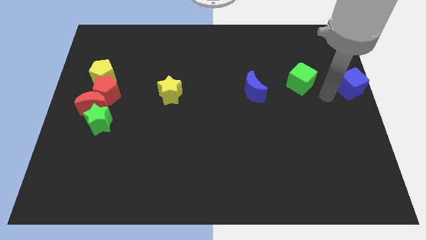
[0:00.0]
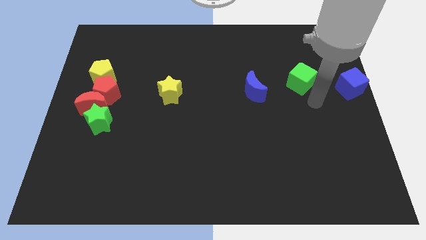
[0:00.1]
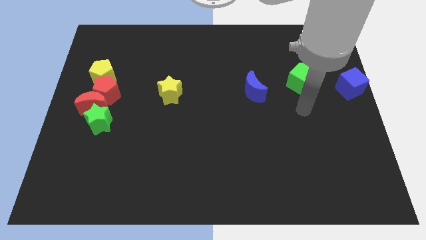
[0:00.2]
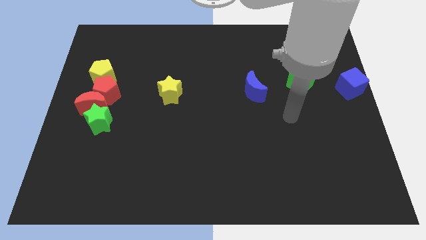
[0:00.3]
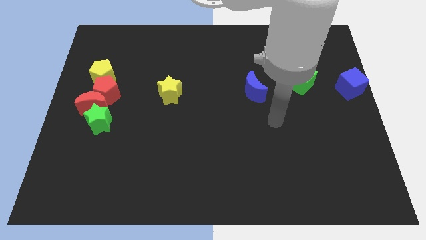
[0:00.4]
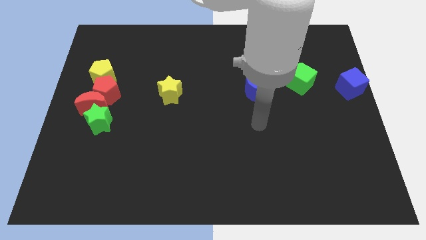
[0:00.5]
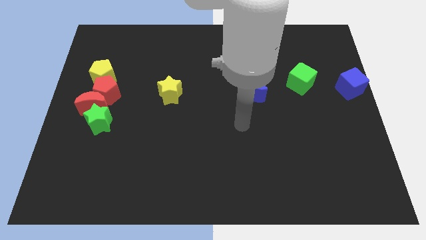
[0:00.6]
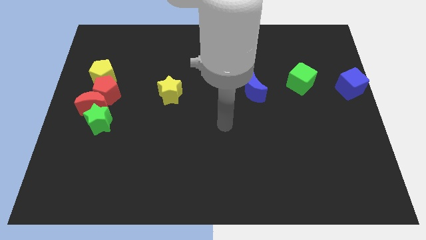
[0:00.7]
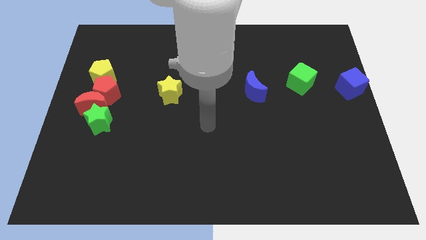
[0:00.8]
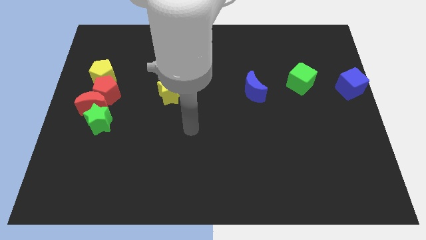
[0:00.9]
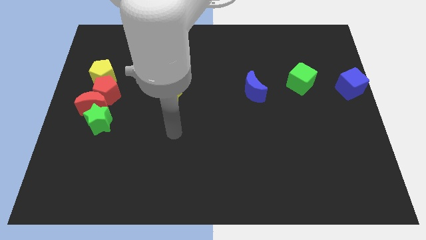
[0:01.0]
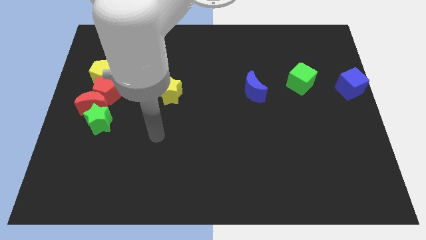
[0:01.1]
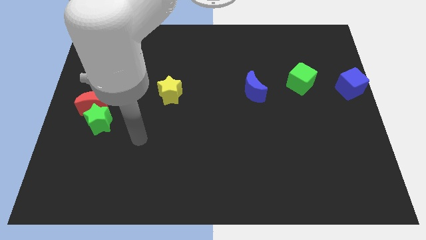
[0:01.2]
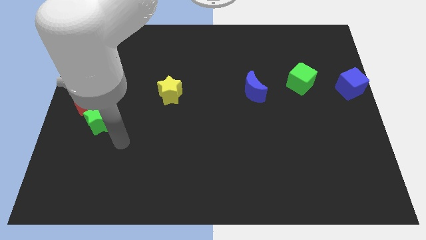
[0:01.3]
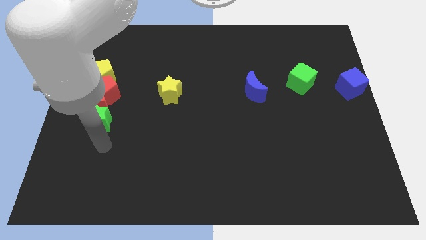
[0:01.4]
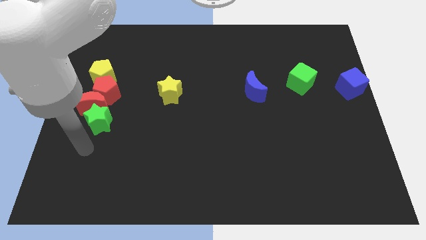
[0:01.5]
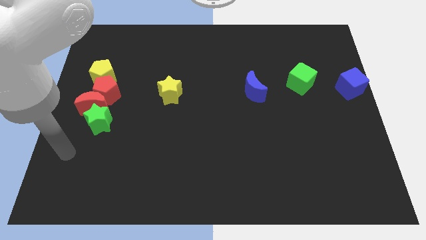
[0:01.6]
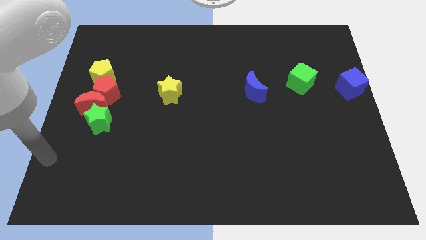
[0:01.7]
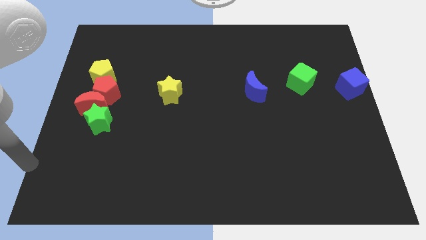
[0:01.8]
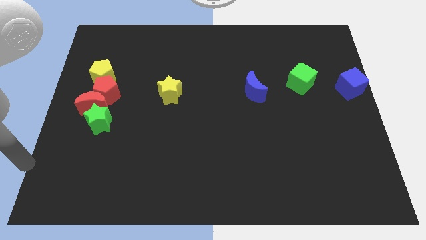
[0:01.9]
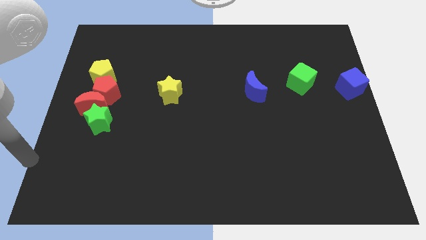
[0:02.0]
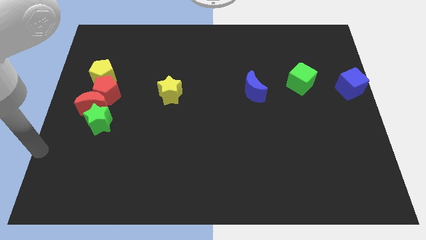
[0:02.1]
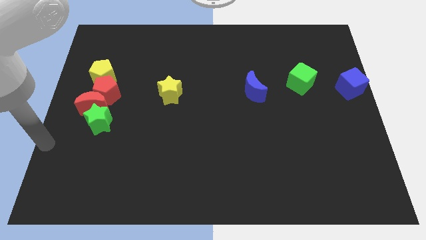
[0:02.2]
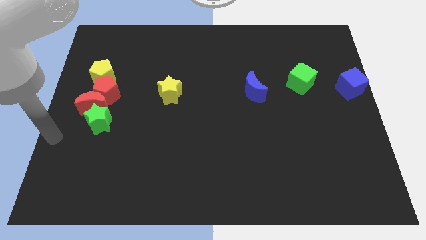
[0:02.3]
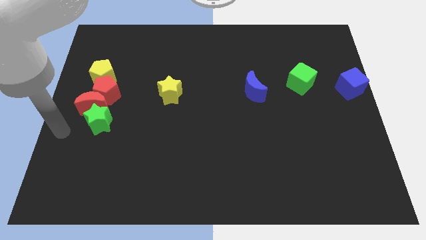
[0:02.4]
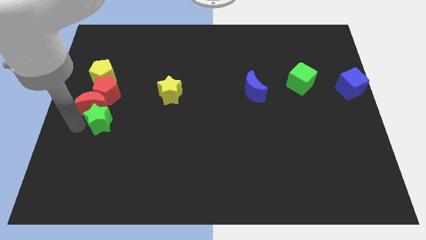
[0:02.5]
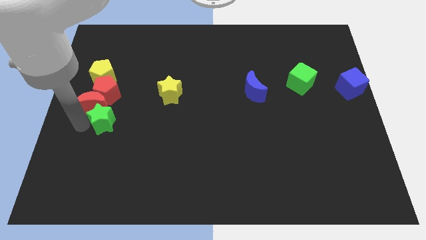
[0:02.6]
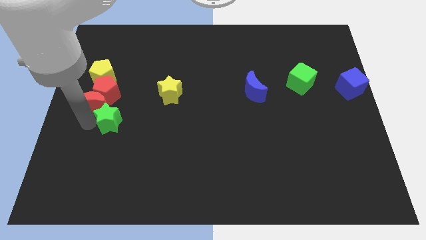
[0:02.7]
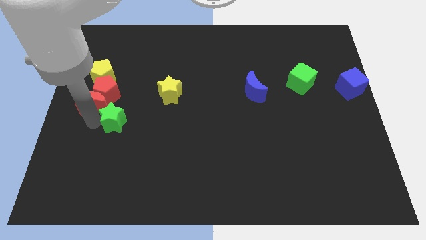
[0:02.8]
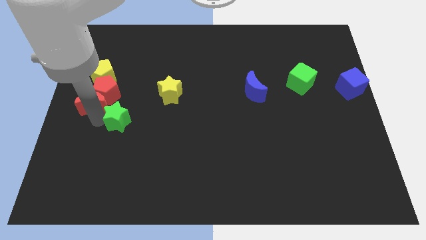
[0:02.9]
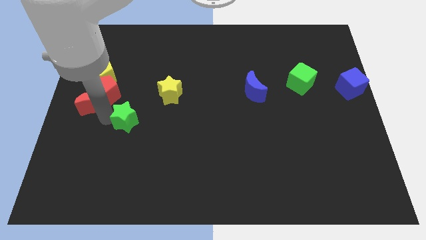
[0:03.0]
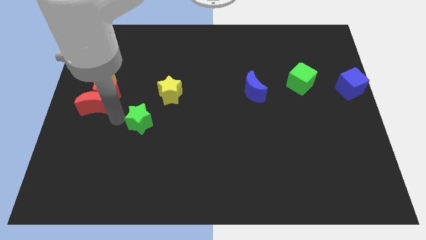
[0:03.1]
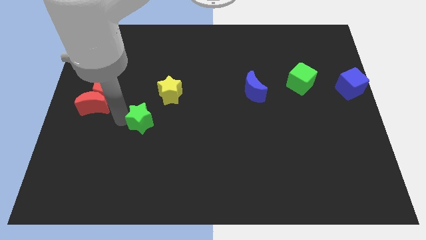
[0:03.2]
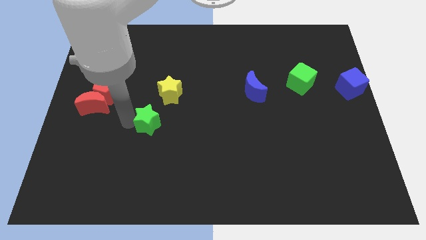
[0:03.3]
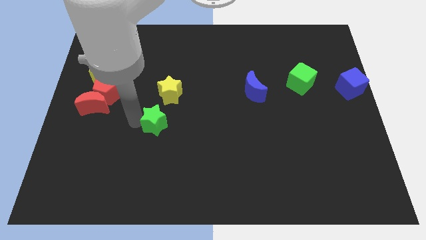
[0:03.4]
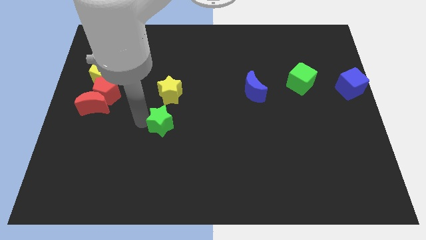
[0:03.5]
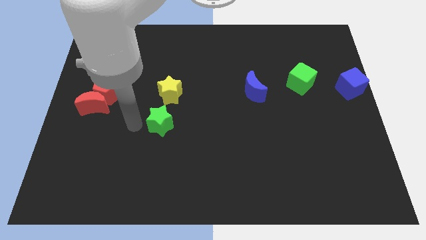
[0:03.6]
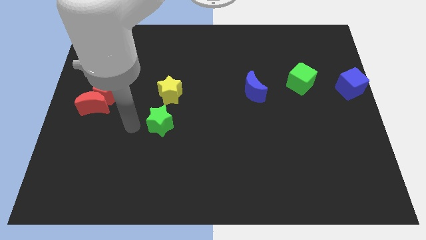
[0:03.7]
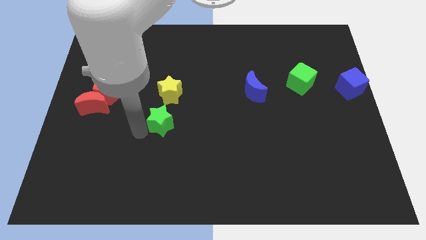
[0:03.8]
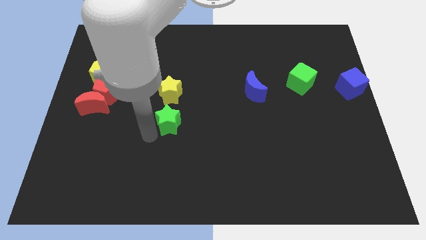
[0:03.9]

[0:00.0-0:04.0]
place the green star below the yellow star

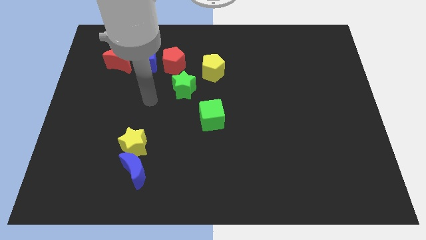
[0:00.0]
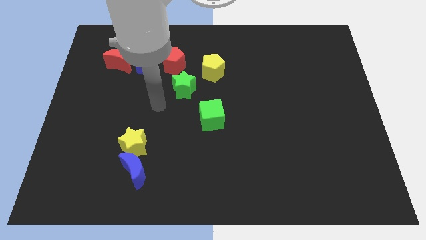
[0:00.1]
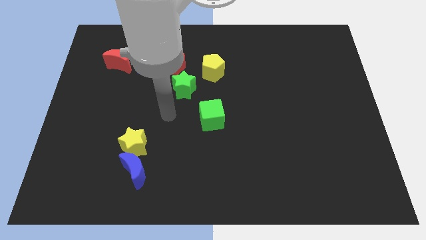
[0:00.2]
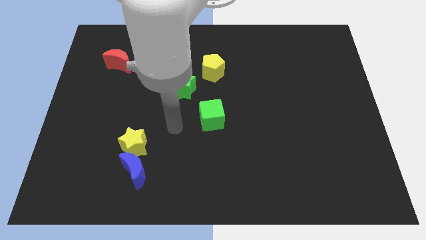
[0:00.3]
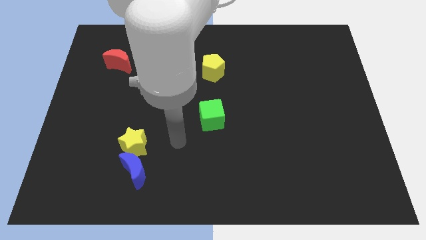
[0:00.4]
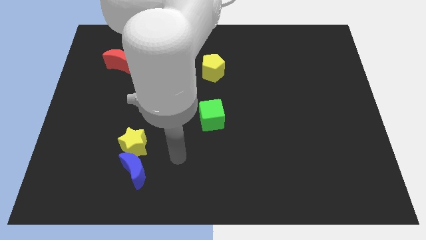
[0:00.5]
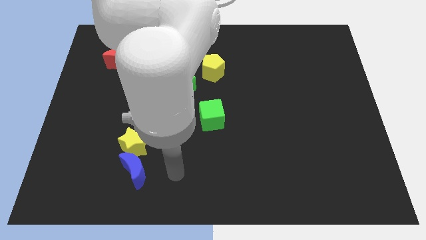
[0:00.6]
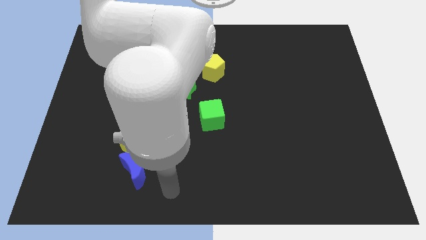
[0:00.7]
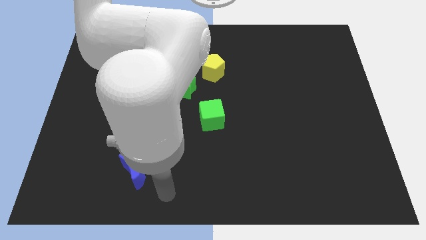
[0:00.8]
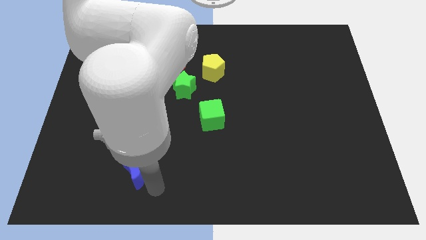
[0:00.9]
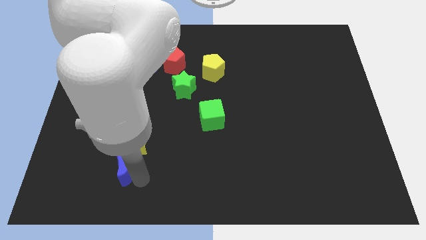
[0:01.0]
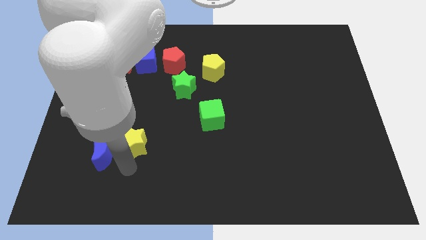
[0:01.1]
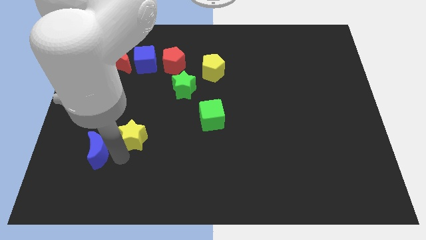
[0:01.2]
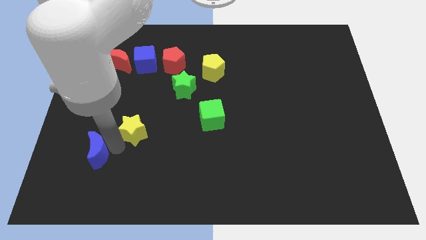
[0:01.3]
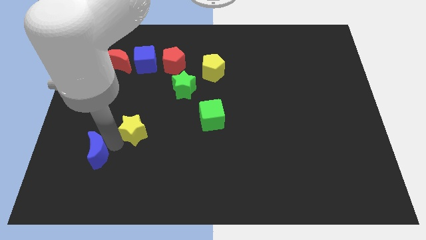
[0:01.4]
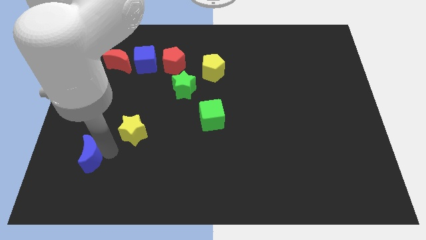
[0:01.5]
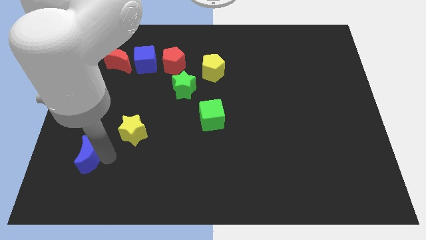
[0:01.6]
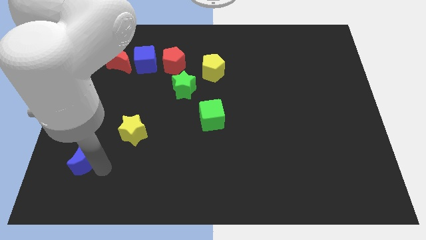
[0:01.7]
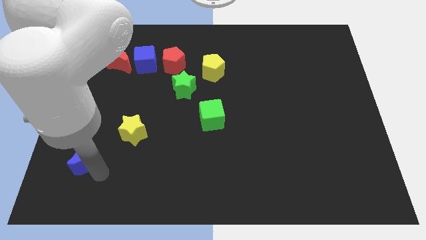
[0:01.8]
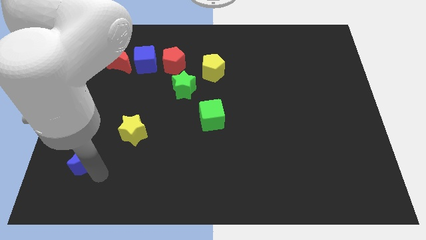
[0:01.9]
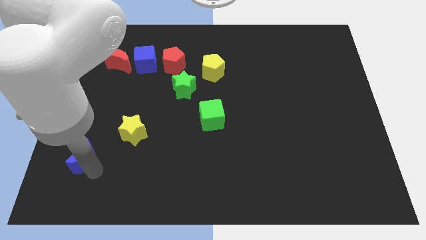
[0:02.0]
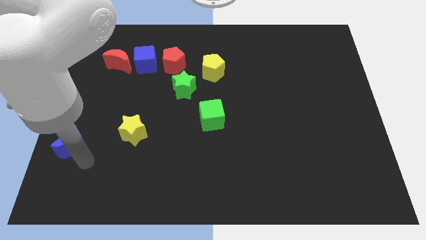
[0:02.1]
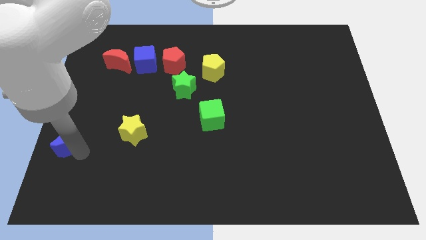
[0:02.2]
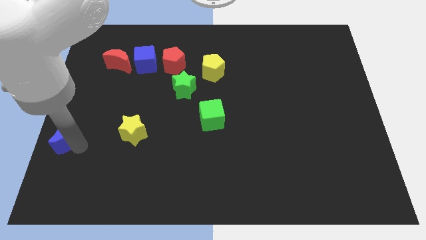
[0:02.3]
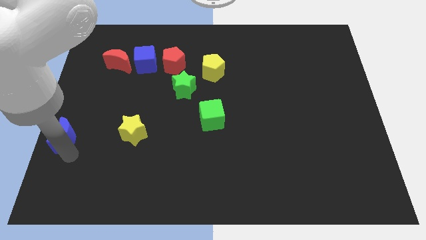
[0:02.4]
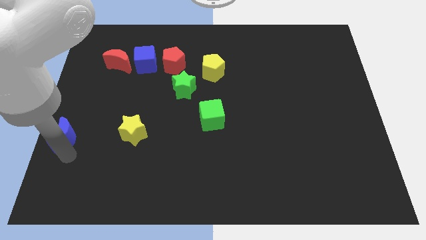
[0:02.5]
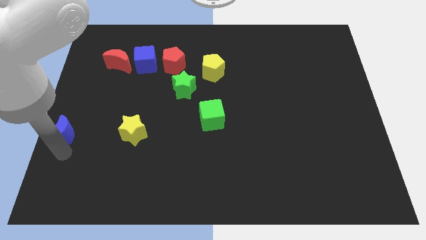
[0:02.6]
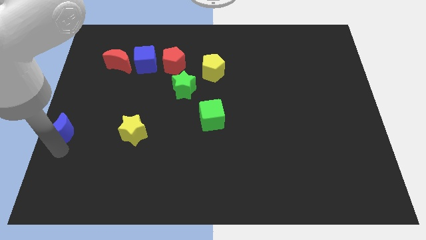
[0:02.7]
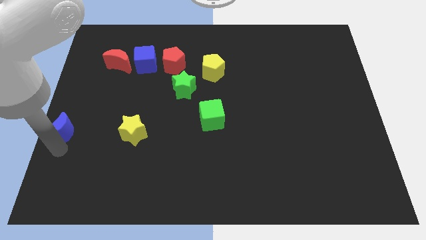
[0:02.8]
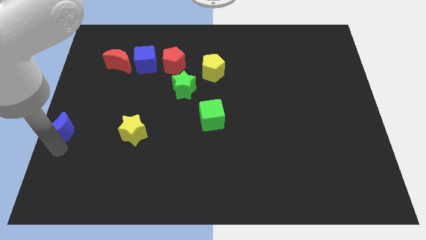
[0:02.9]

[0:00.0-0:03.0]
slide the blue crescent to the left center of the board

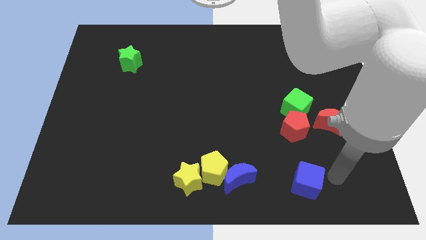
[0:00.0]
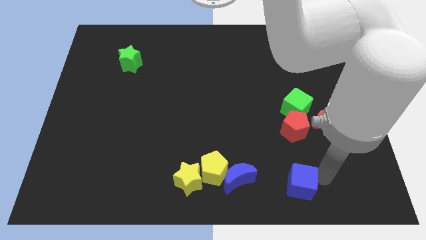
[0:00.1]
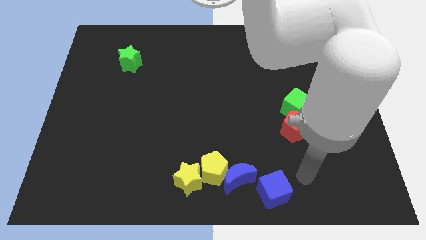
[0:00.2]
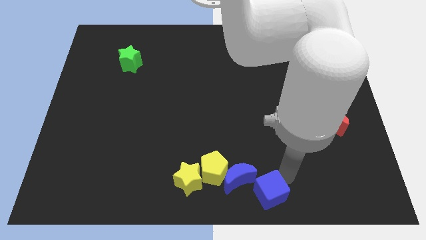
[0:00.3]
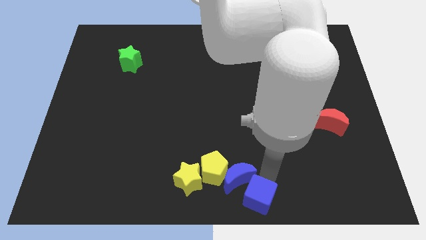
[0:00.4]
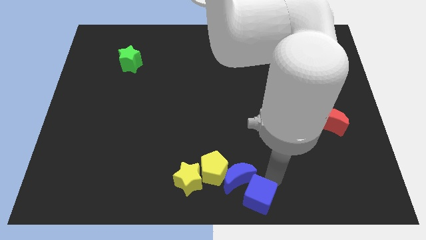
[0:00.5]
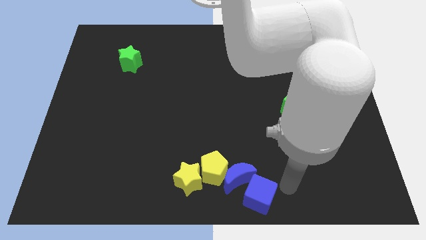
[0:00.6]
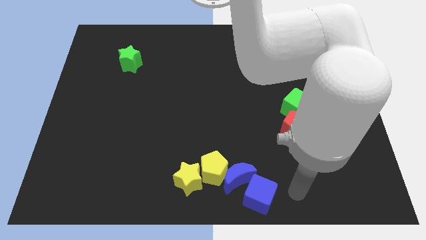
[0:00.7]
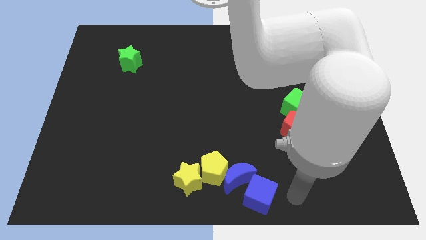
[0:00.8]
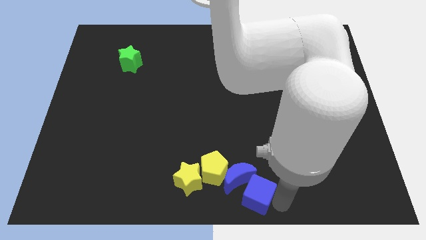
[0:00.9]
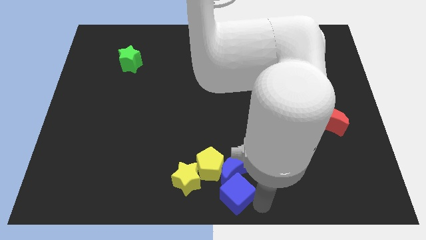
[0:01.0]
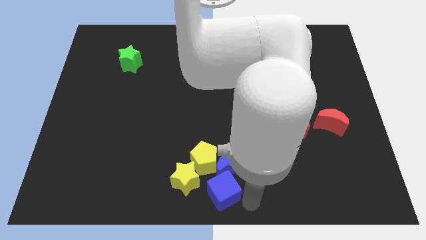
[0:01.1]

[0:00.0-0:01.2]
move the blue cube into the blue moon

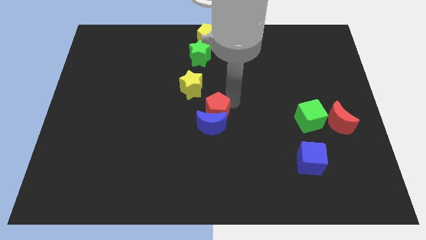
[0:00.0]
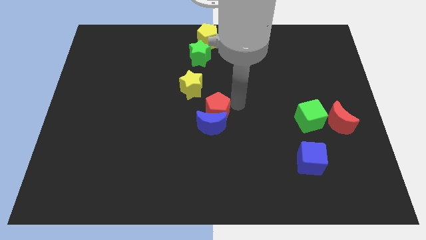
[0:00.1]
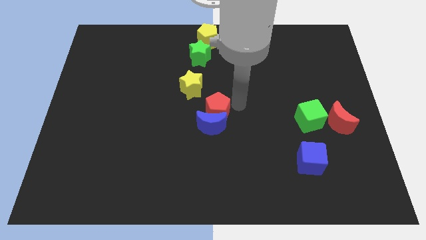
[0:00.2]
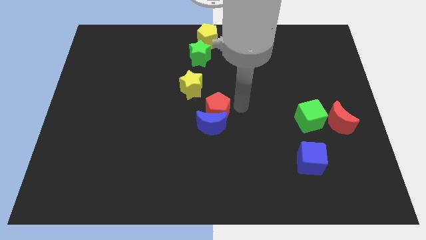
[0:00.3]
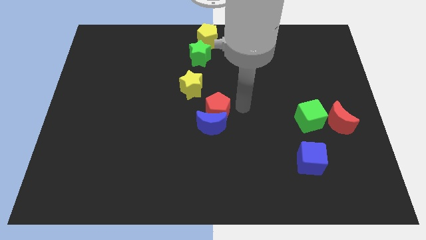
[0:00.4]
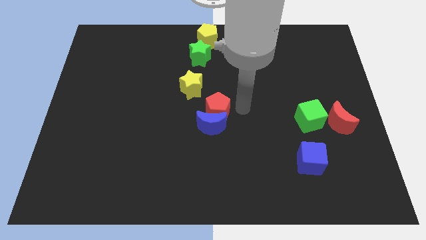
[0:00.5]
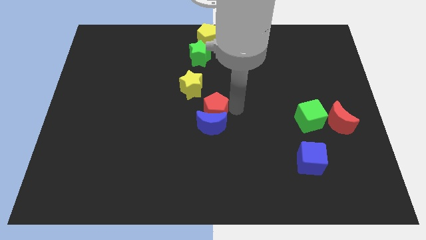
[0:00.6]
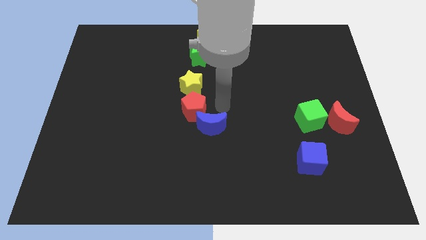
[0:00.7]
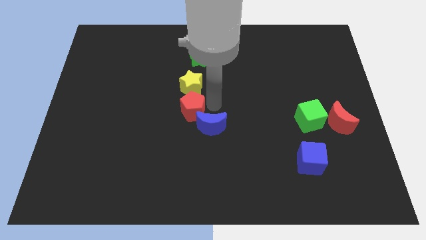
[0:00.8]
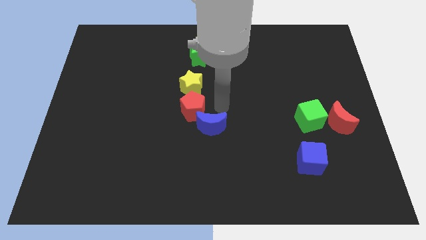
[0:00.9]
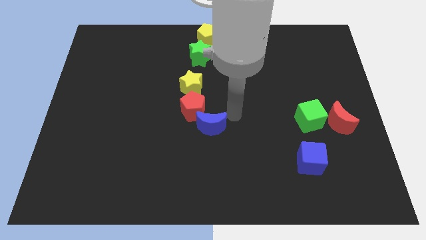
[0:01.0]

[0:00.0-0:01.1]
place the red pentagon below the yellow star
